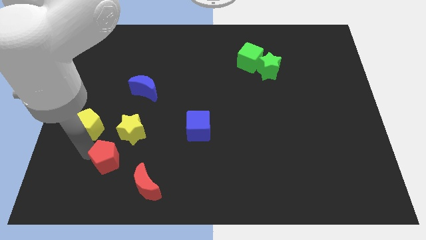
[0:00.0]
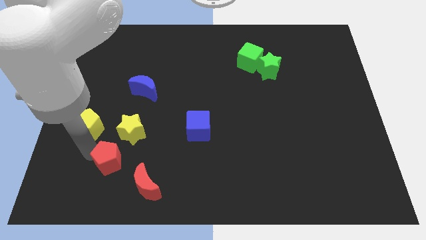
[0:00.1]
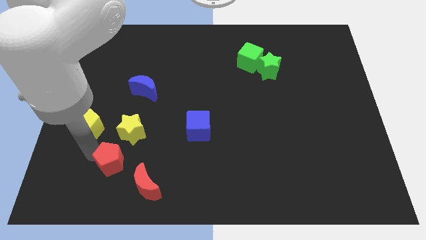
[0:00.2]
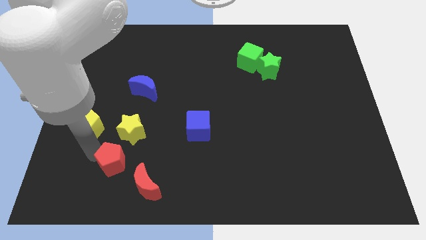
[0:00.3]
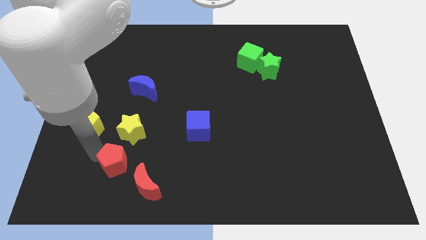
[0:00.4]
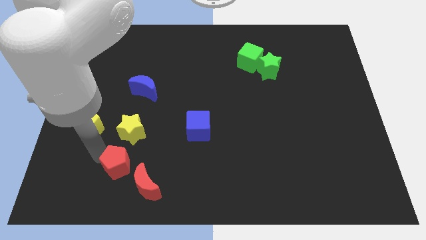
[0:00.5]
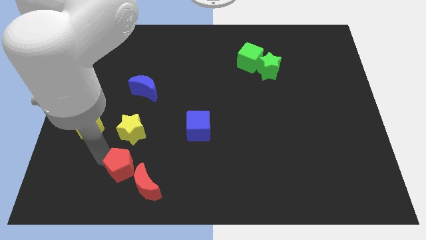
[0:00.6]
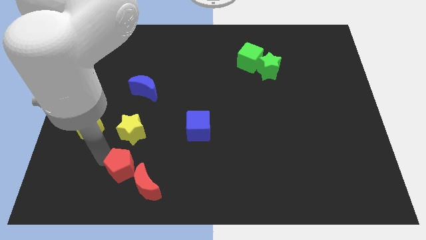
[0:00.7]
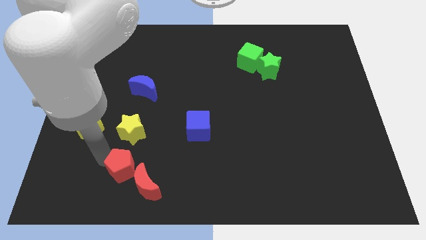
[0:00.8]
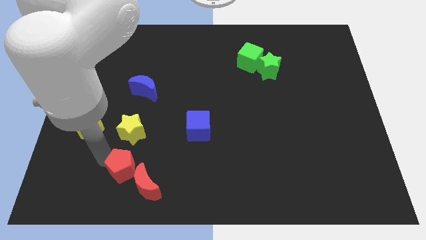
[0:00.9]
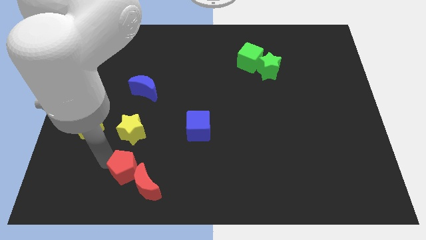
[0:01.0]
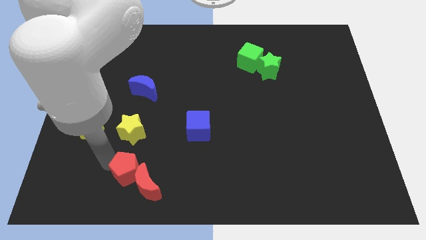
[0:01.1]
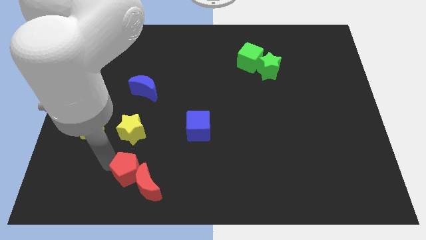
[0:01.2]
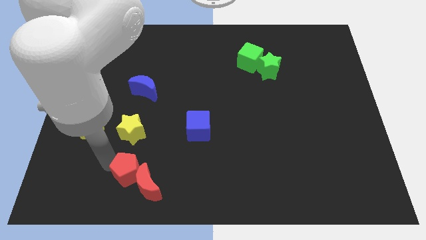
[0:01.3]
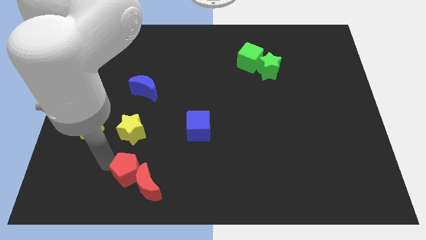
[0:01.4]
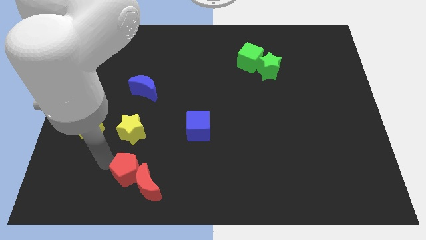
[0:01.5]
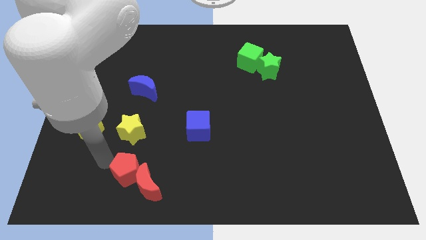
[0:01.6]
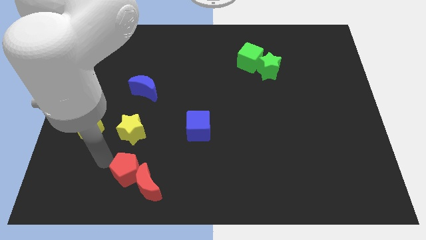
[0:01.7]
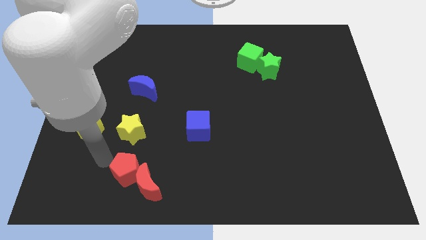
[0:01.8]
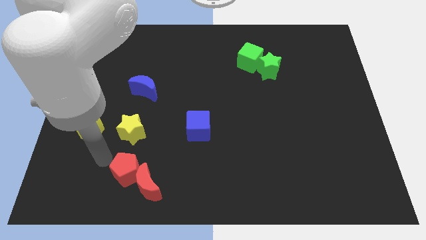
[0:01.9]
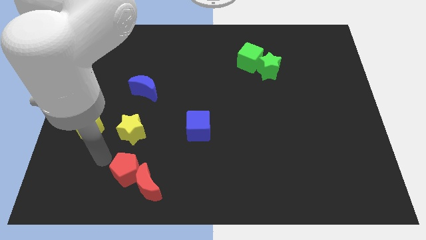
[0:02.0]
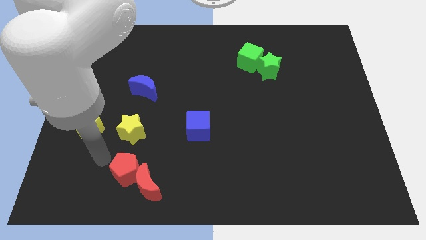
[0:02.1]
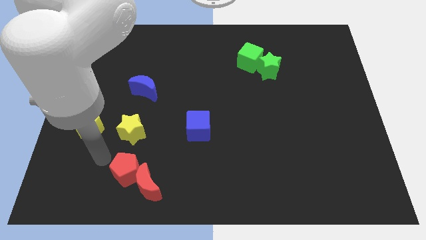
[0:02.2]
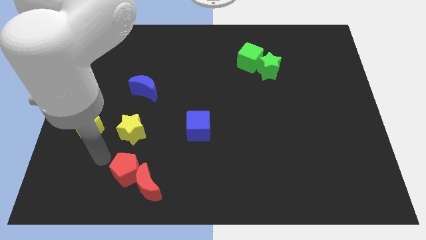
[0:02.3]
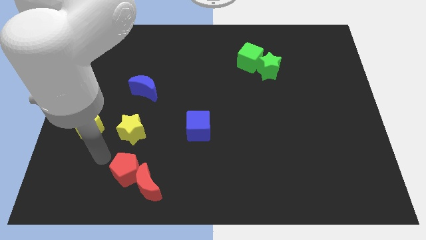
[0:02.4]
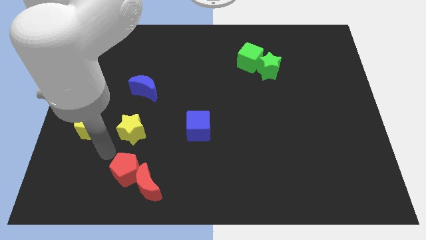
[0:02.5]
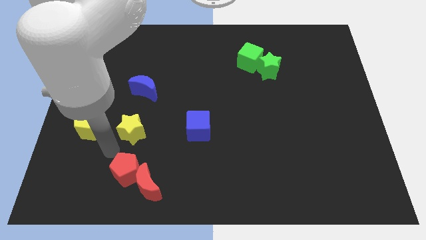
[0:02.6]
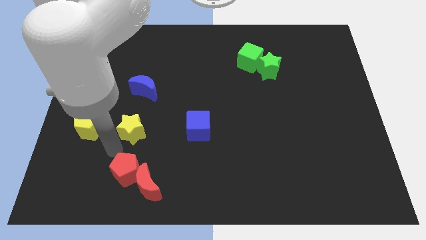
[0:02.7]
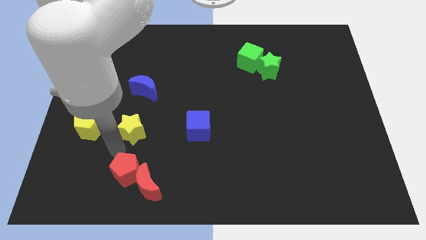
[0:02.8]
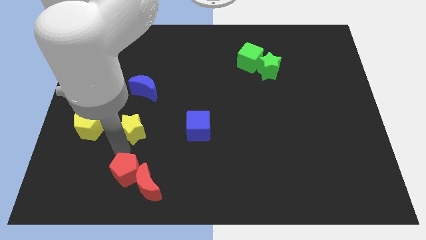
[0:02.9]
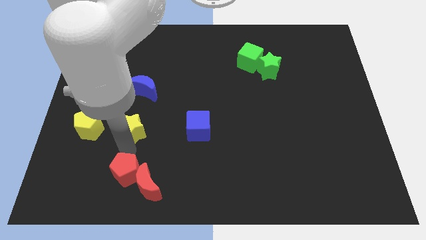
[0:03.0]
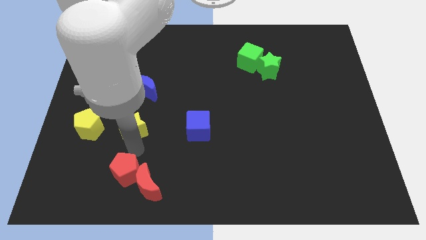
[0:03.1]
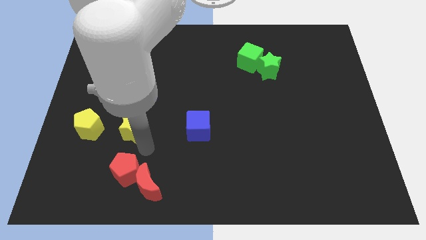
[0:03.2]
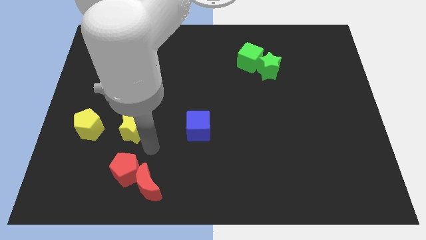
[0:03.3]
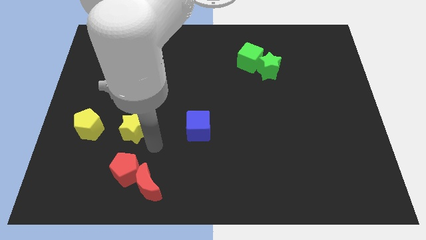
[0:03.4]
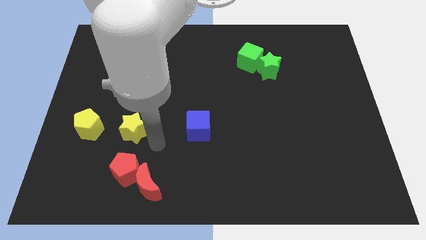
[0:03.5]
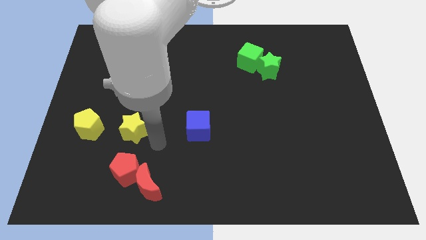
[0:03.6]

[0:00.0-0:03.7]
slide the red pentagon into the red moon

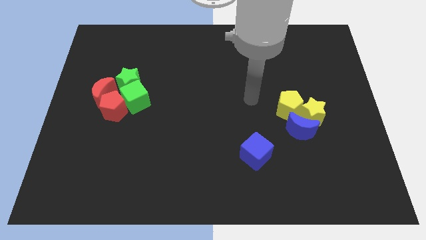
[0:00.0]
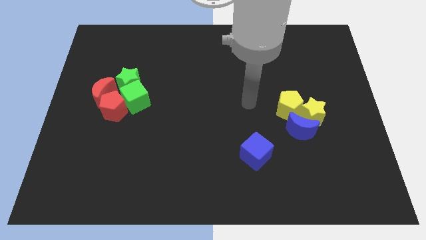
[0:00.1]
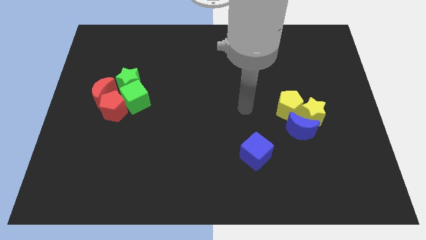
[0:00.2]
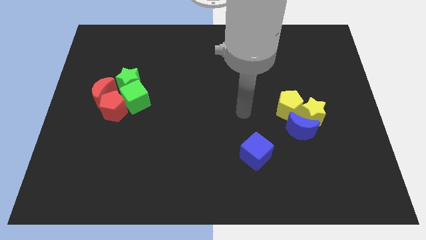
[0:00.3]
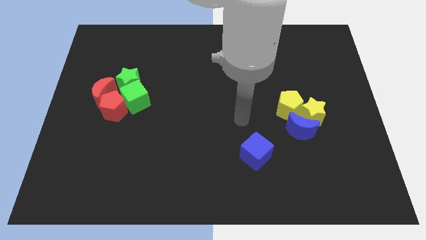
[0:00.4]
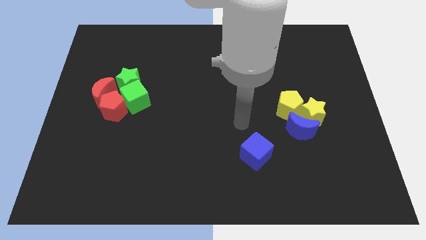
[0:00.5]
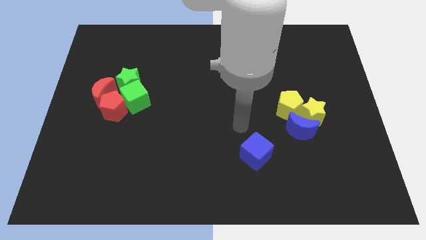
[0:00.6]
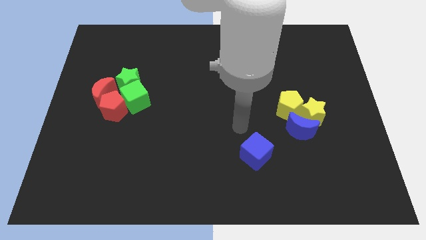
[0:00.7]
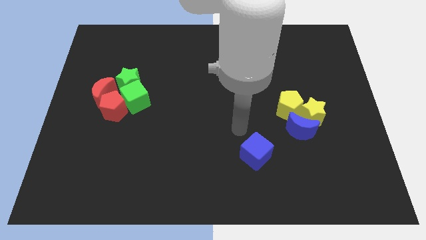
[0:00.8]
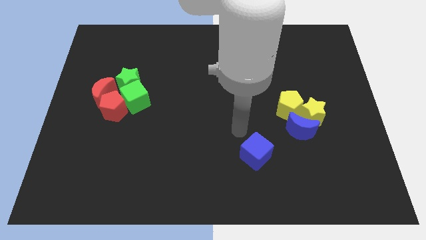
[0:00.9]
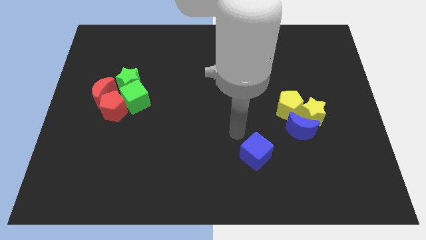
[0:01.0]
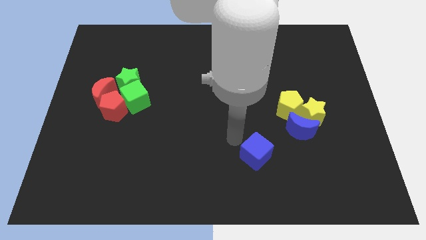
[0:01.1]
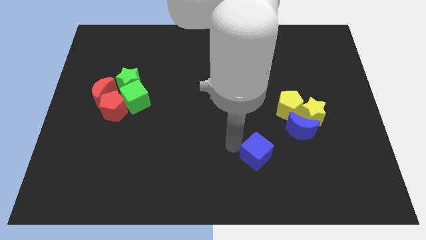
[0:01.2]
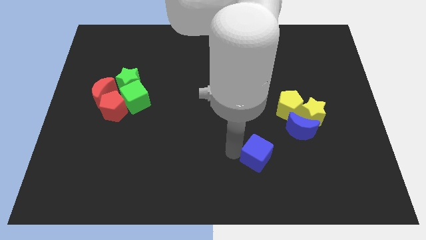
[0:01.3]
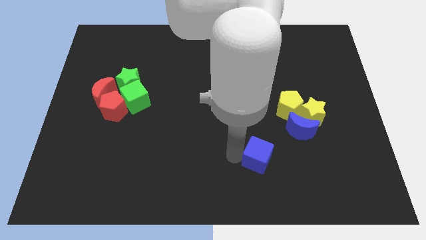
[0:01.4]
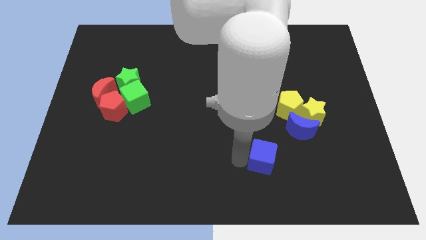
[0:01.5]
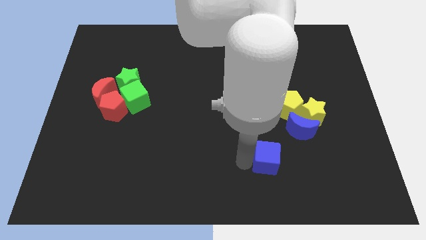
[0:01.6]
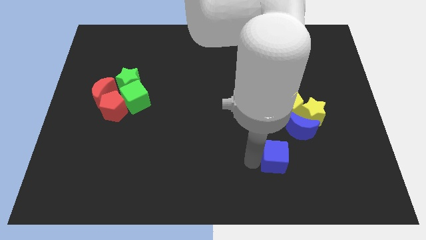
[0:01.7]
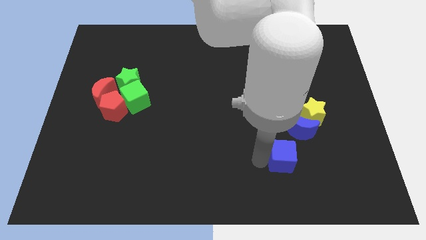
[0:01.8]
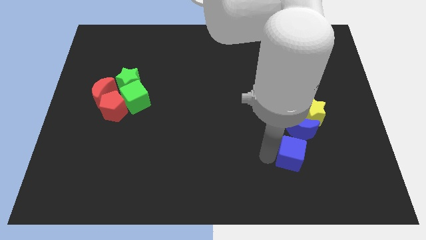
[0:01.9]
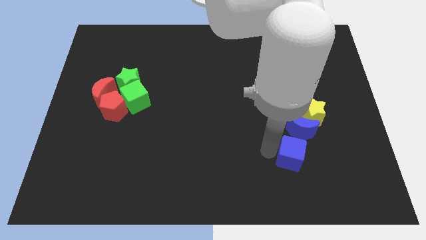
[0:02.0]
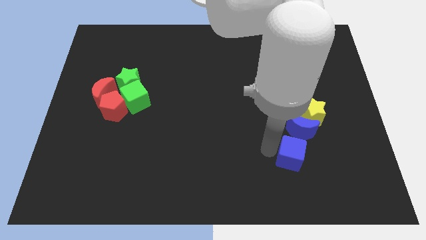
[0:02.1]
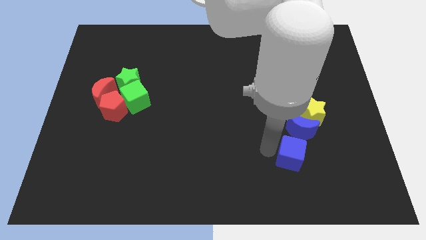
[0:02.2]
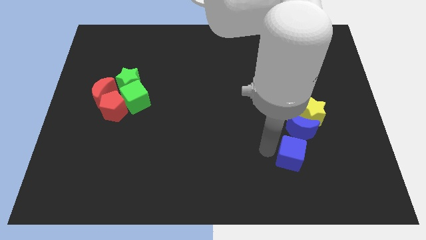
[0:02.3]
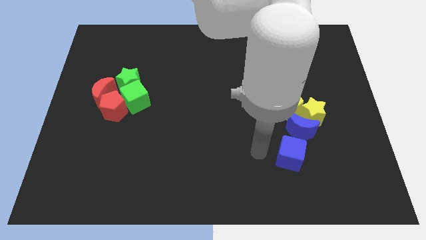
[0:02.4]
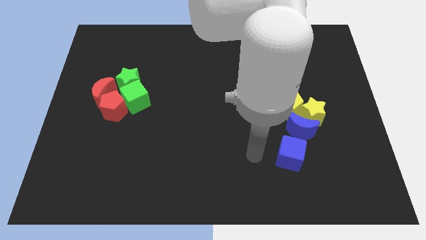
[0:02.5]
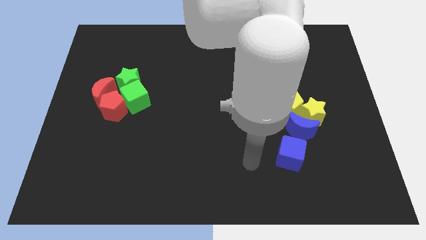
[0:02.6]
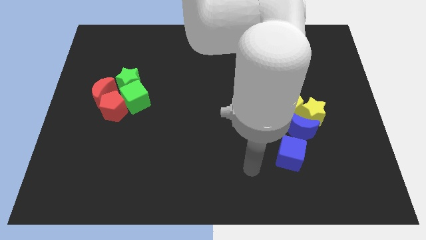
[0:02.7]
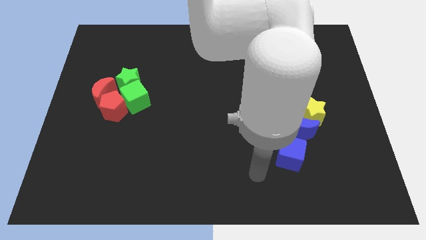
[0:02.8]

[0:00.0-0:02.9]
move blue cube slightly right

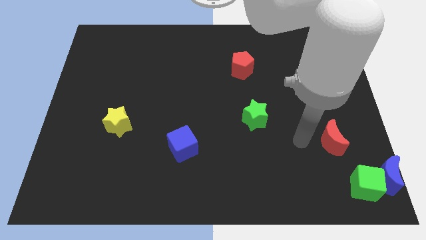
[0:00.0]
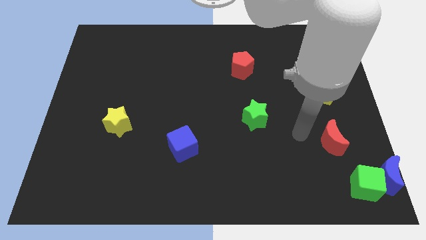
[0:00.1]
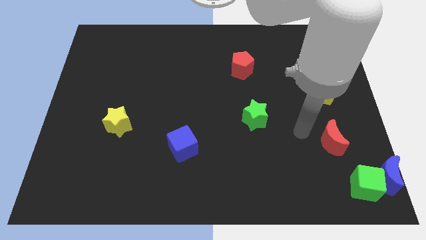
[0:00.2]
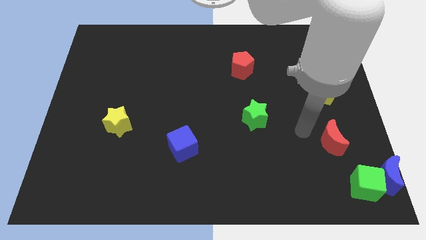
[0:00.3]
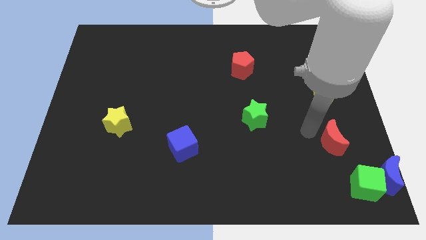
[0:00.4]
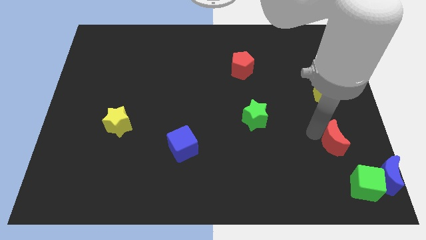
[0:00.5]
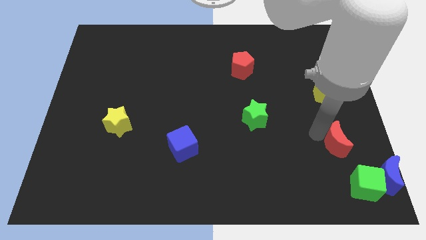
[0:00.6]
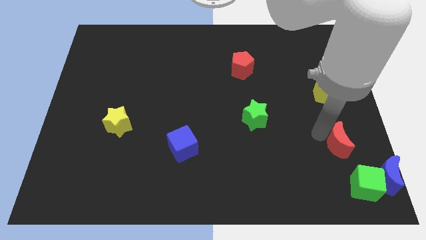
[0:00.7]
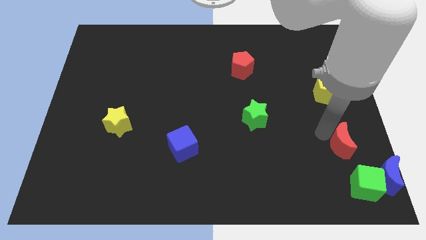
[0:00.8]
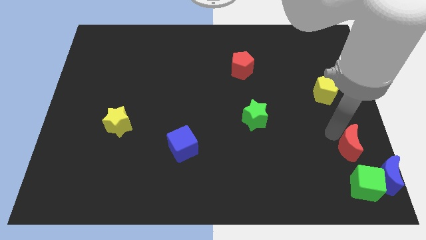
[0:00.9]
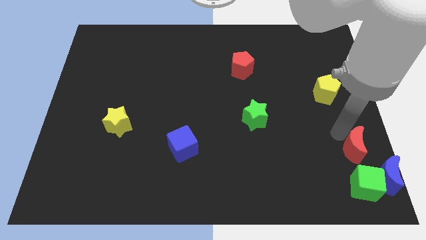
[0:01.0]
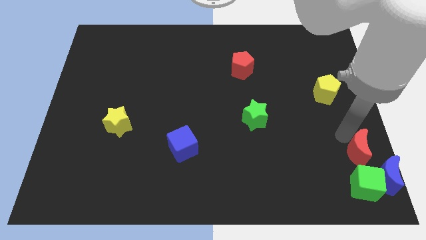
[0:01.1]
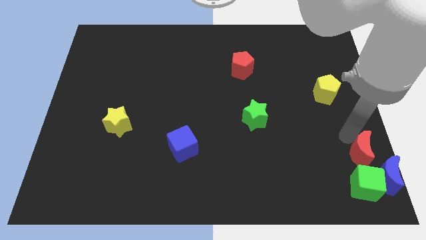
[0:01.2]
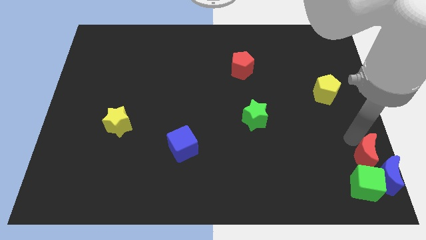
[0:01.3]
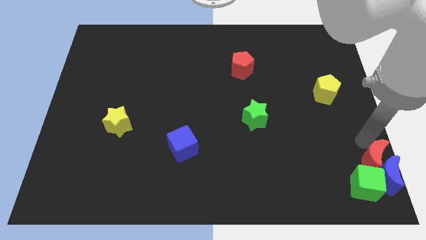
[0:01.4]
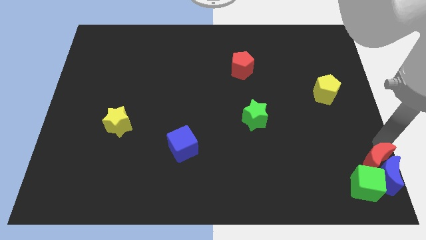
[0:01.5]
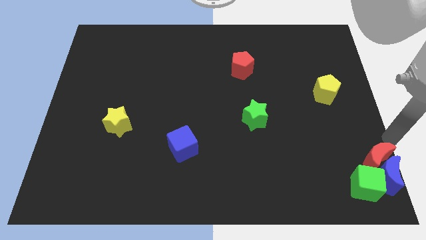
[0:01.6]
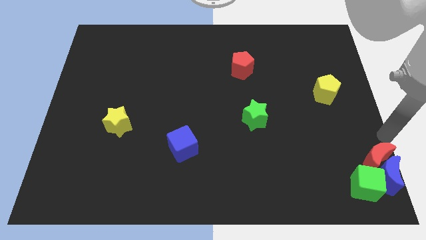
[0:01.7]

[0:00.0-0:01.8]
move the red crescent at the top of the blue crescent

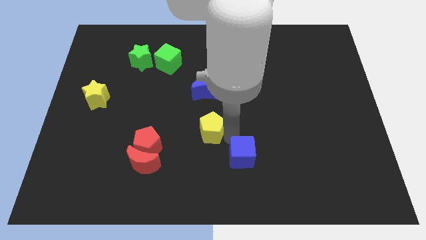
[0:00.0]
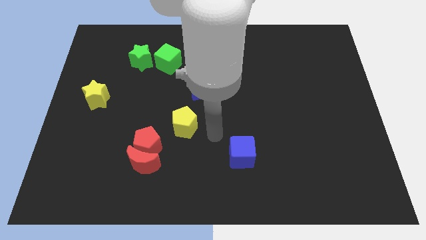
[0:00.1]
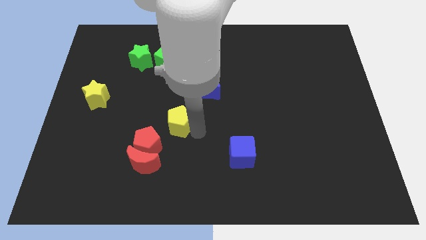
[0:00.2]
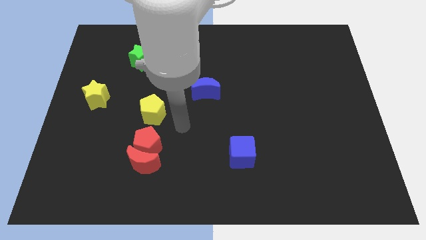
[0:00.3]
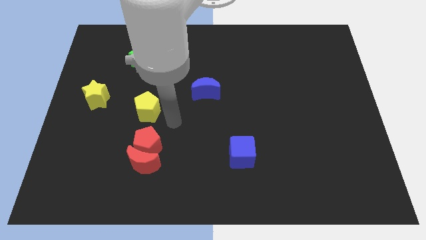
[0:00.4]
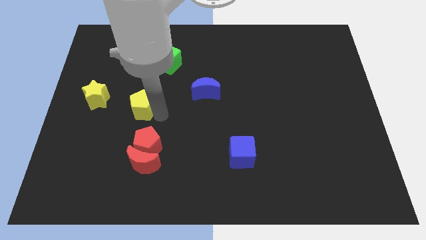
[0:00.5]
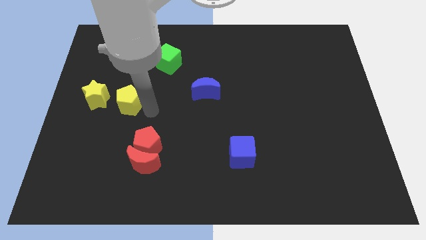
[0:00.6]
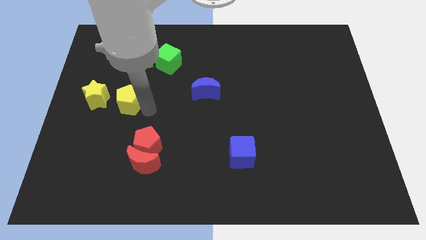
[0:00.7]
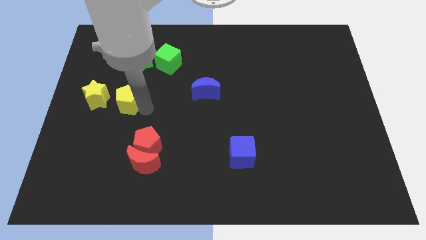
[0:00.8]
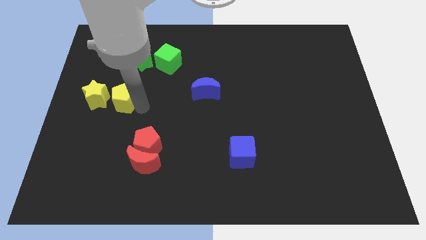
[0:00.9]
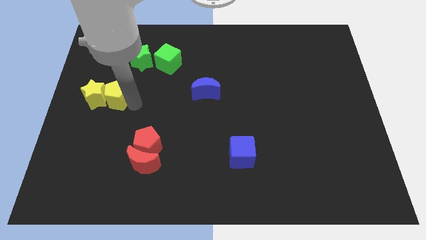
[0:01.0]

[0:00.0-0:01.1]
move the yellow pentagon to the right of the yellow star
